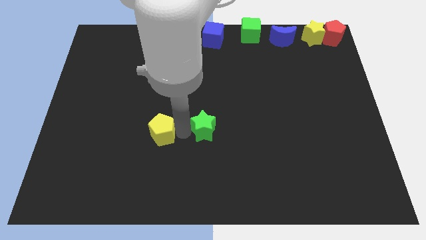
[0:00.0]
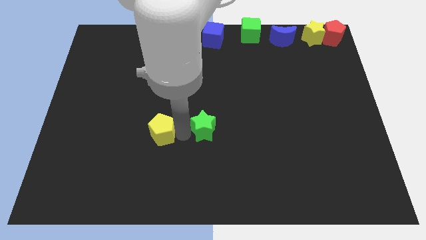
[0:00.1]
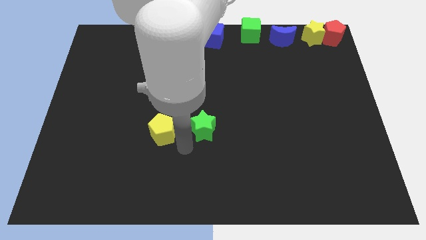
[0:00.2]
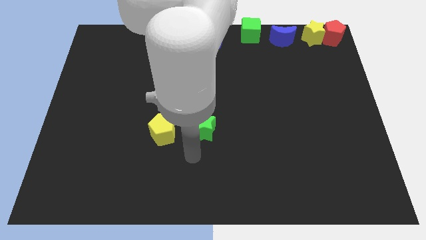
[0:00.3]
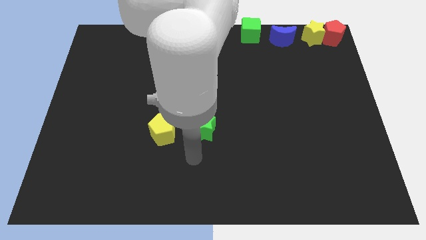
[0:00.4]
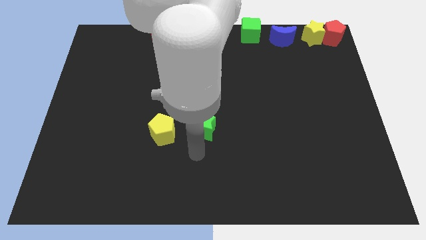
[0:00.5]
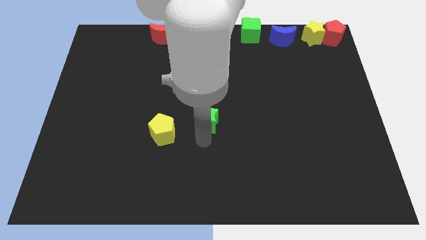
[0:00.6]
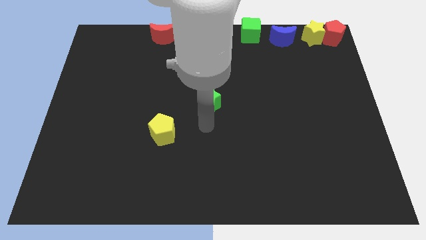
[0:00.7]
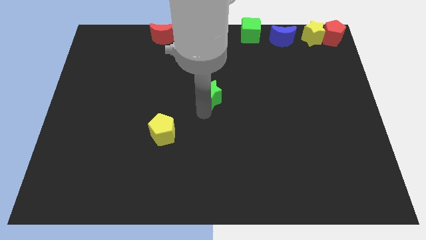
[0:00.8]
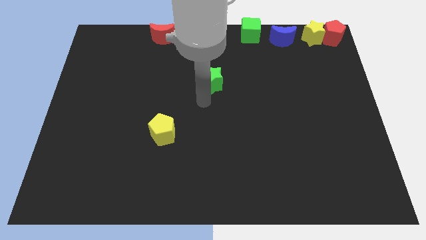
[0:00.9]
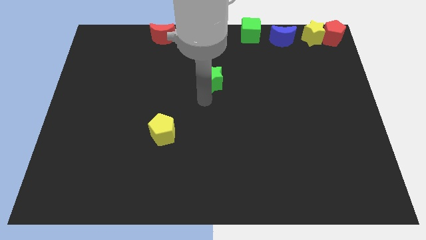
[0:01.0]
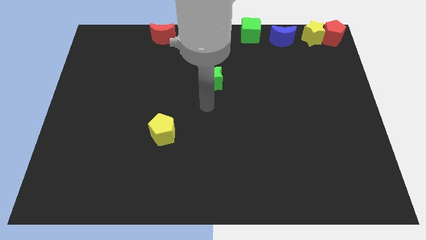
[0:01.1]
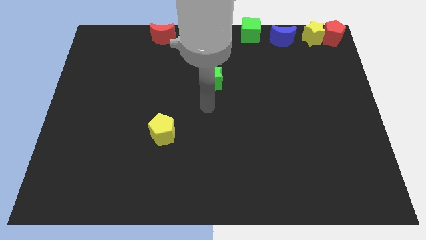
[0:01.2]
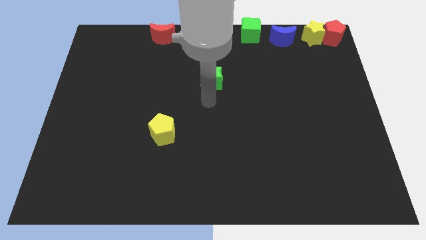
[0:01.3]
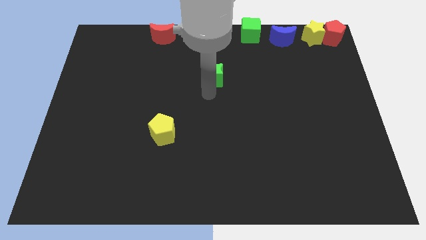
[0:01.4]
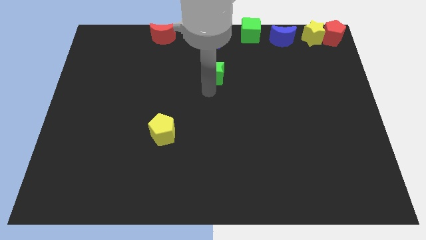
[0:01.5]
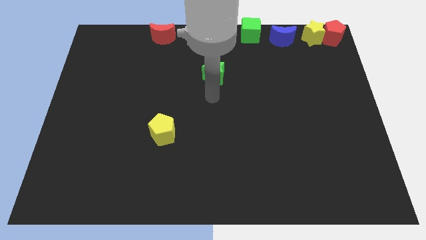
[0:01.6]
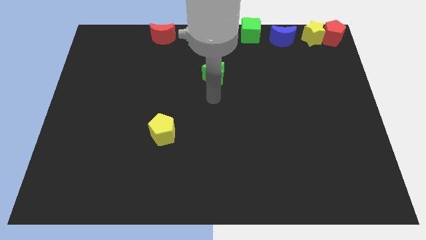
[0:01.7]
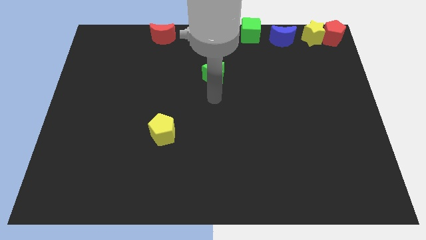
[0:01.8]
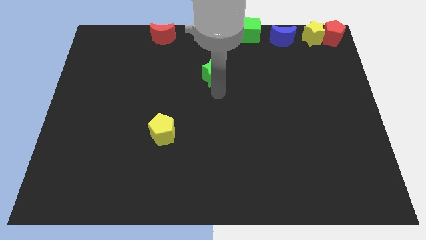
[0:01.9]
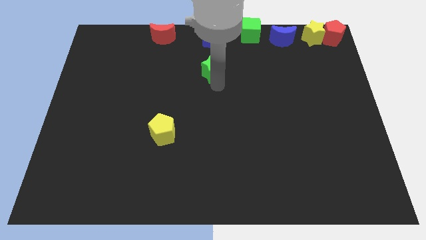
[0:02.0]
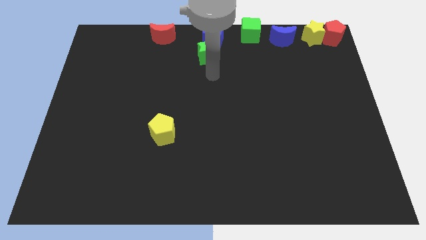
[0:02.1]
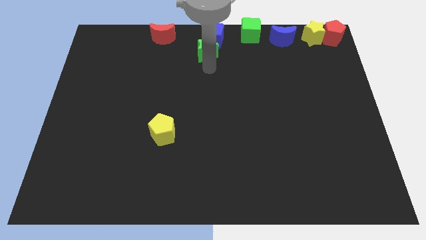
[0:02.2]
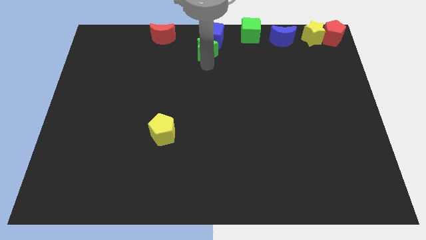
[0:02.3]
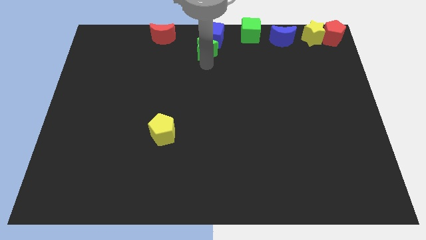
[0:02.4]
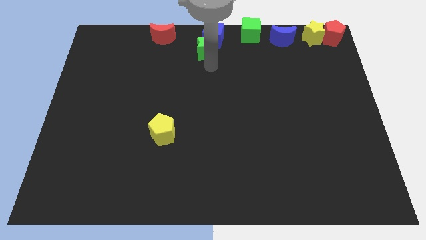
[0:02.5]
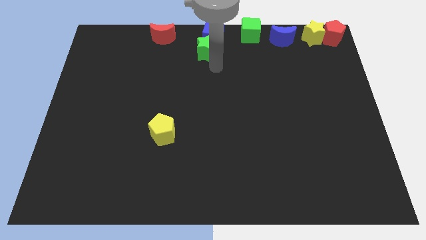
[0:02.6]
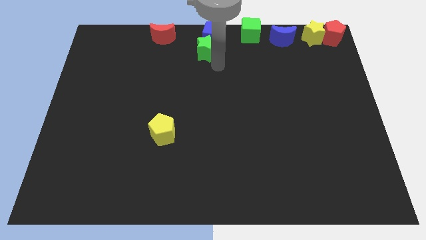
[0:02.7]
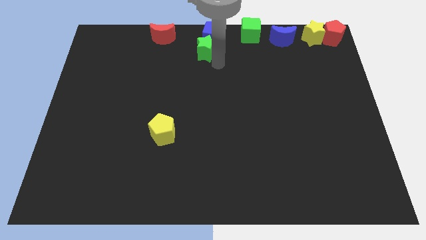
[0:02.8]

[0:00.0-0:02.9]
move the green star below the blue cube

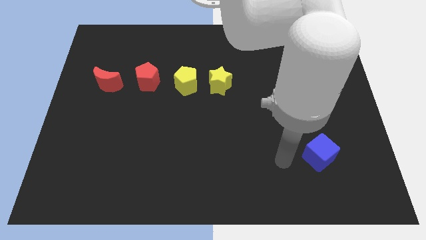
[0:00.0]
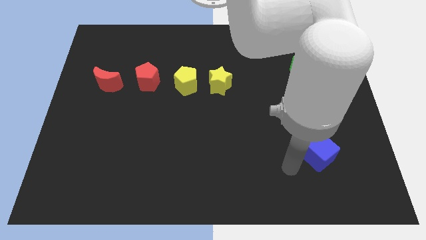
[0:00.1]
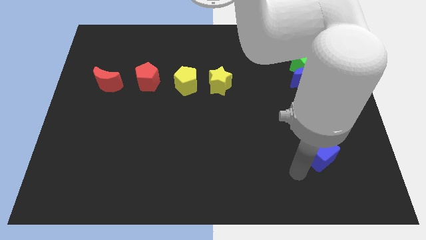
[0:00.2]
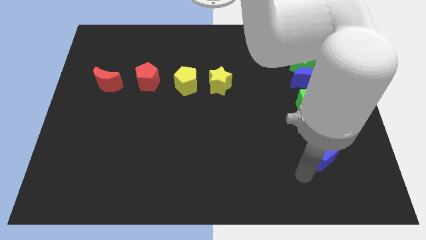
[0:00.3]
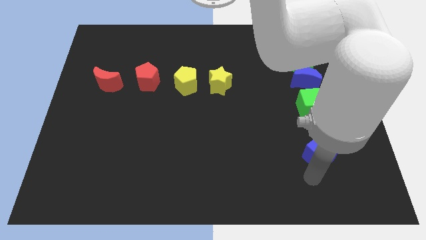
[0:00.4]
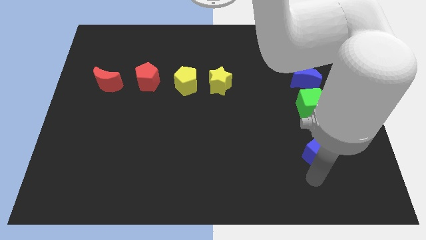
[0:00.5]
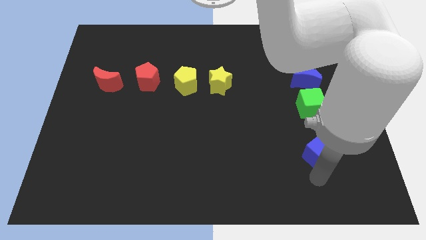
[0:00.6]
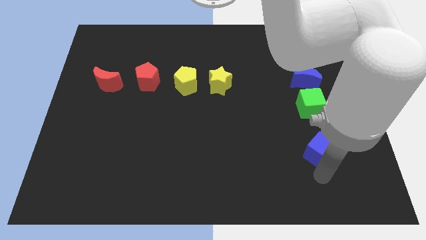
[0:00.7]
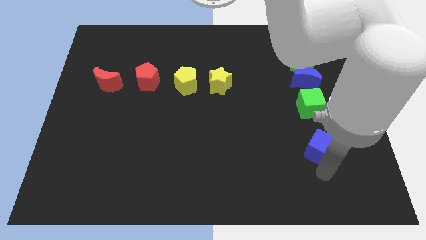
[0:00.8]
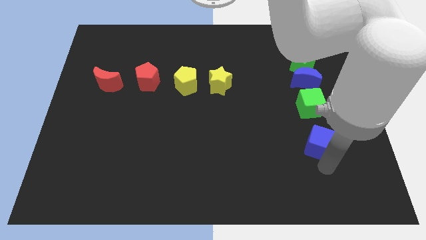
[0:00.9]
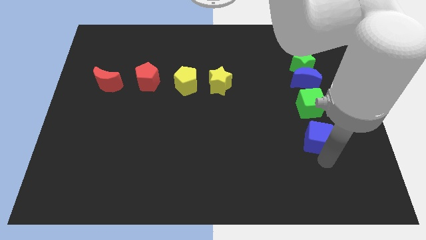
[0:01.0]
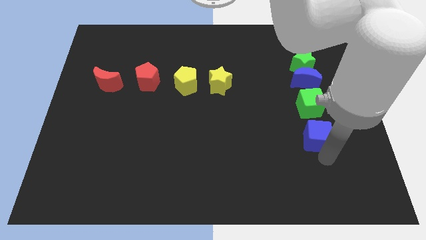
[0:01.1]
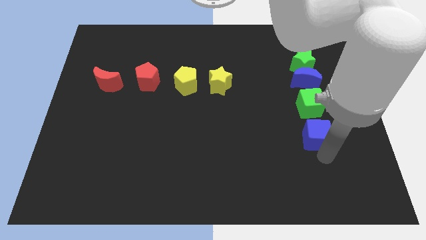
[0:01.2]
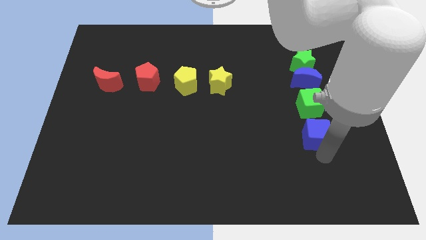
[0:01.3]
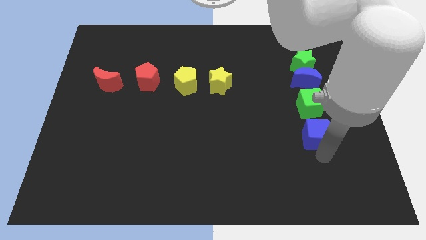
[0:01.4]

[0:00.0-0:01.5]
push the blue cube to the bottom of green cube

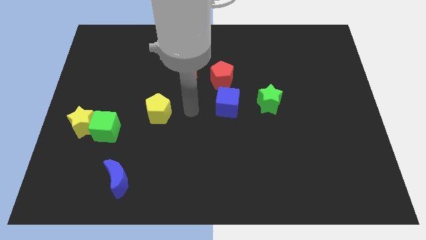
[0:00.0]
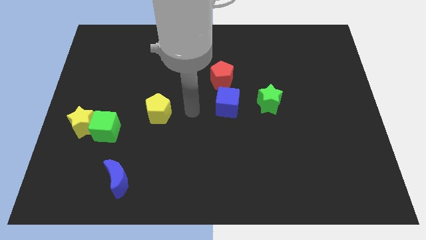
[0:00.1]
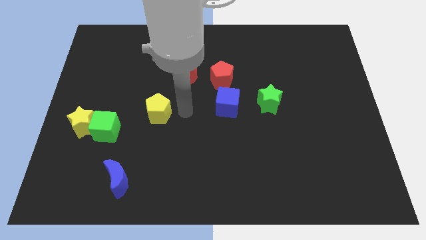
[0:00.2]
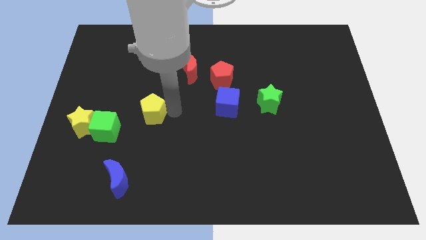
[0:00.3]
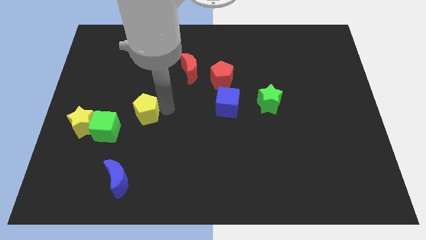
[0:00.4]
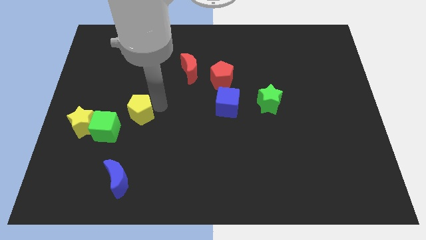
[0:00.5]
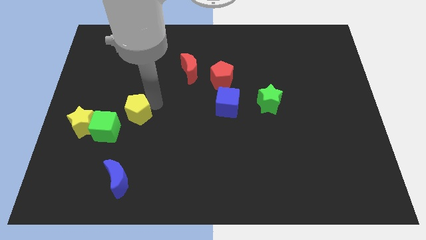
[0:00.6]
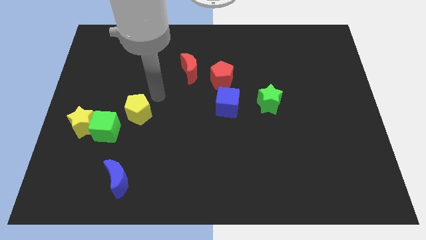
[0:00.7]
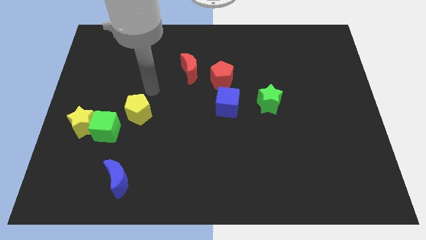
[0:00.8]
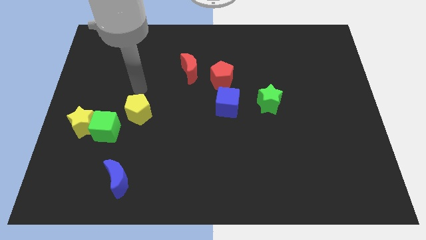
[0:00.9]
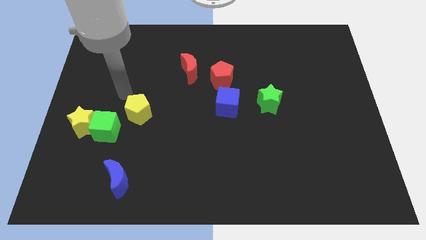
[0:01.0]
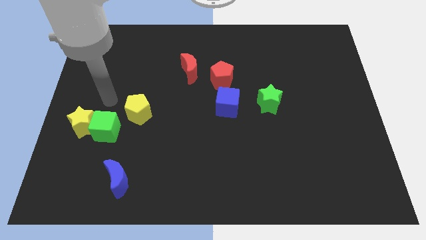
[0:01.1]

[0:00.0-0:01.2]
push yellow pentagon towards green cube

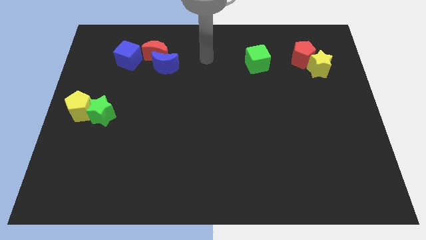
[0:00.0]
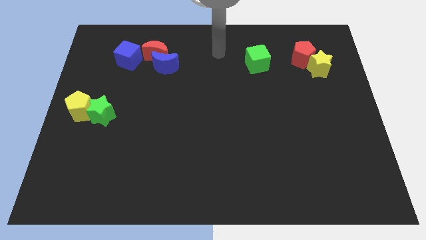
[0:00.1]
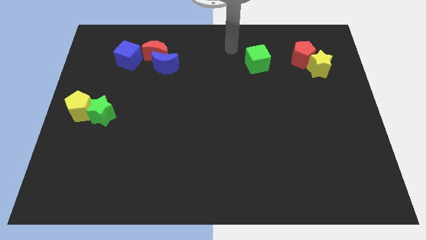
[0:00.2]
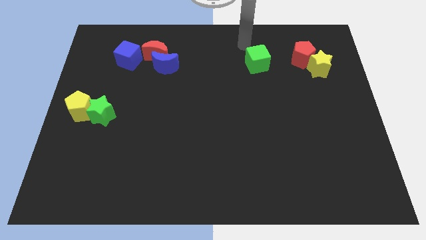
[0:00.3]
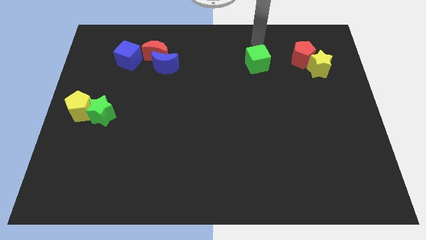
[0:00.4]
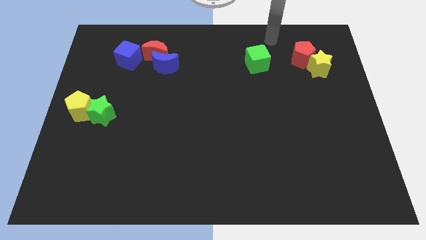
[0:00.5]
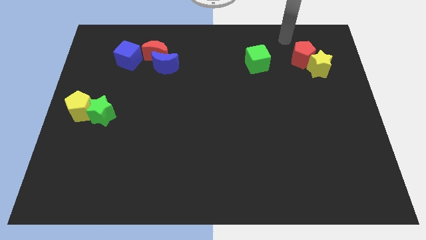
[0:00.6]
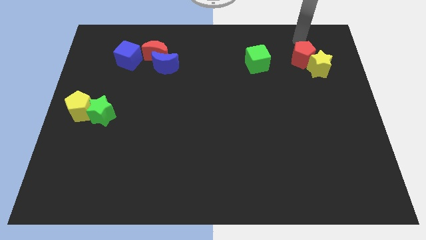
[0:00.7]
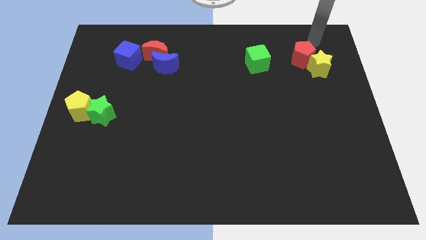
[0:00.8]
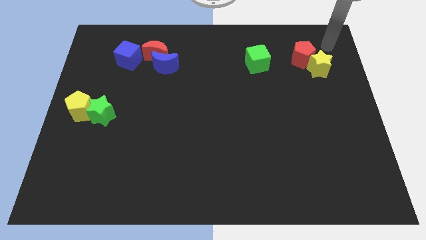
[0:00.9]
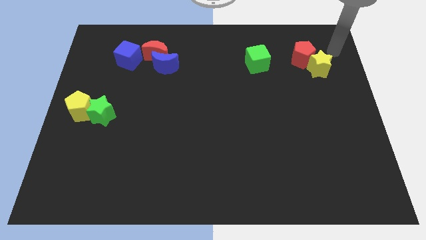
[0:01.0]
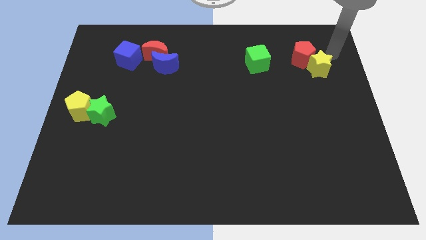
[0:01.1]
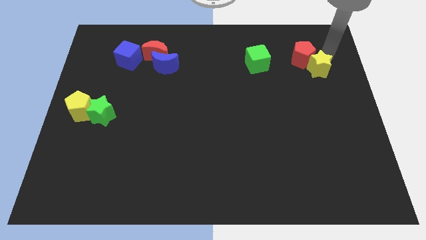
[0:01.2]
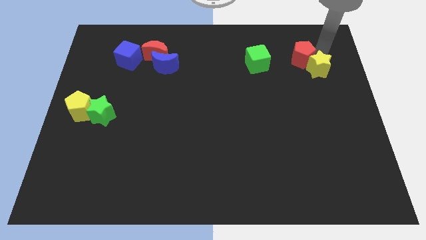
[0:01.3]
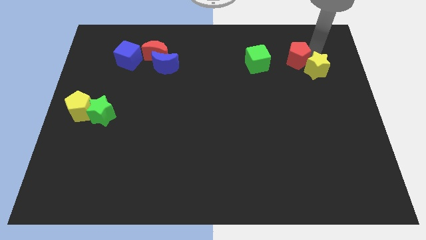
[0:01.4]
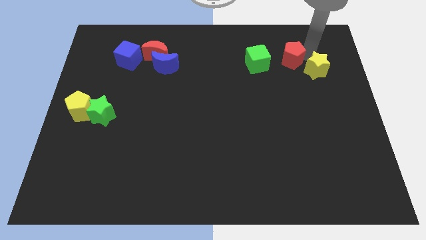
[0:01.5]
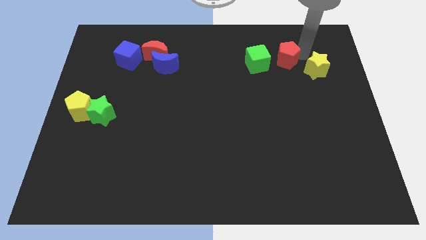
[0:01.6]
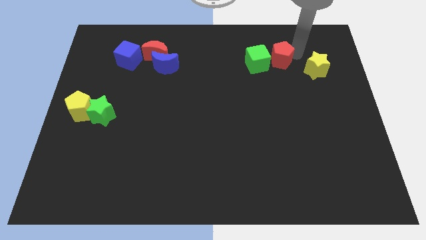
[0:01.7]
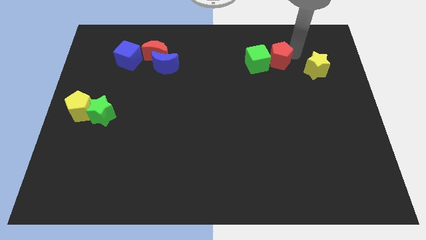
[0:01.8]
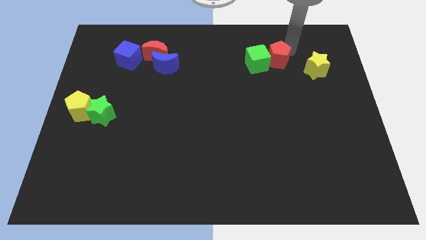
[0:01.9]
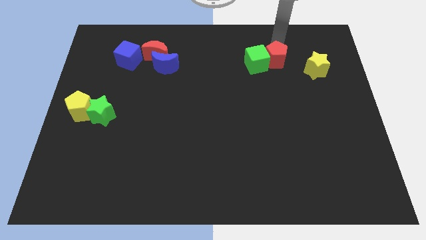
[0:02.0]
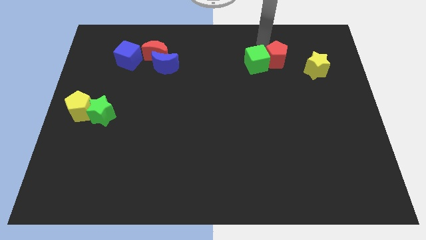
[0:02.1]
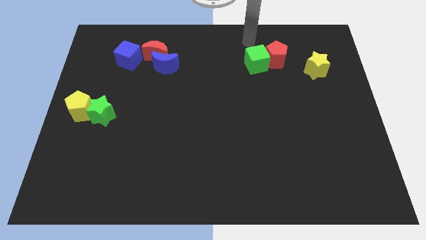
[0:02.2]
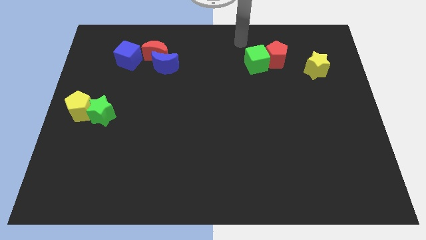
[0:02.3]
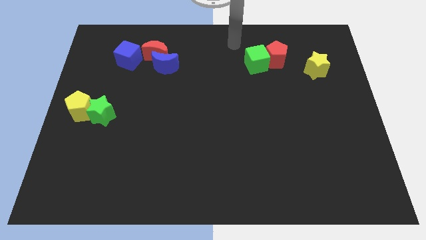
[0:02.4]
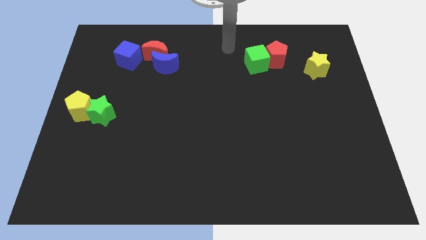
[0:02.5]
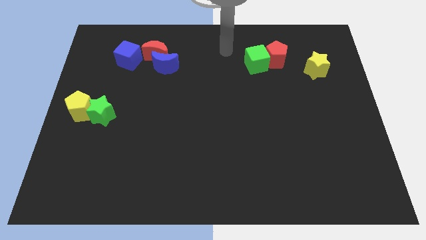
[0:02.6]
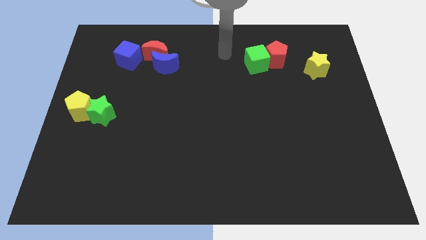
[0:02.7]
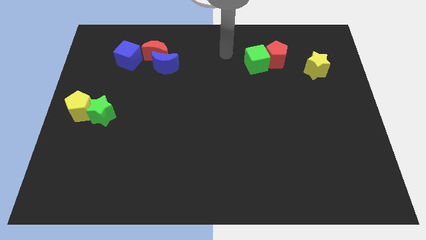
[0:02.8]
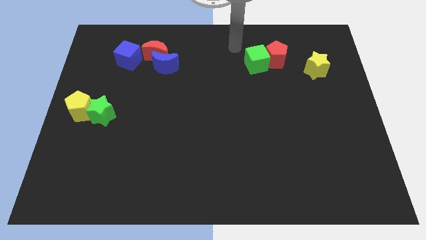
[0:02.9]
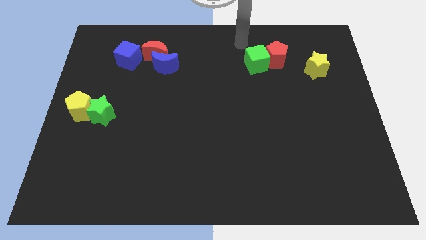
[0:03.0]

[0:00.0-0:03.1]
separate red pentagon from yellow star

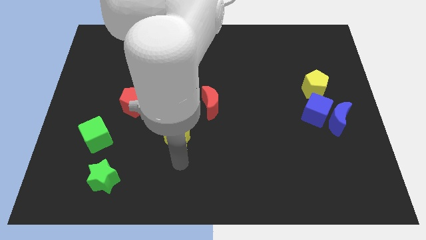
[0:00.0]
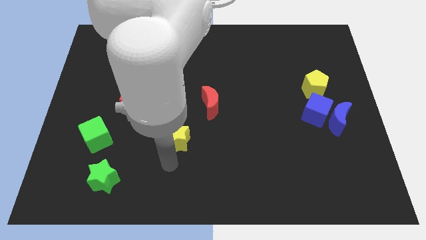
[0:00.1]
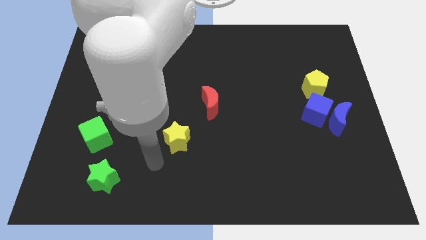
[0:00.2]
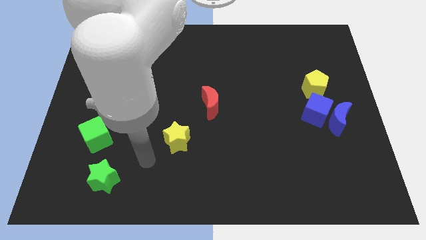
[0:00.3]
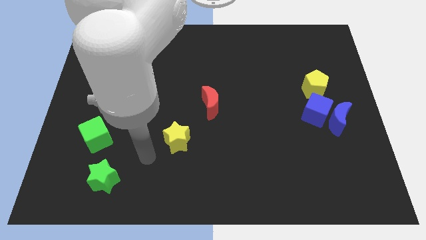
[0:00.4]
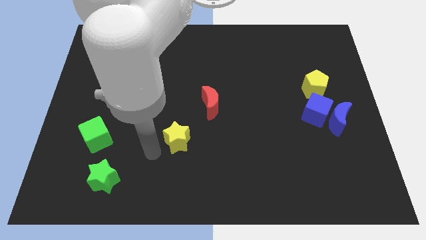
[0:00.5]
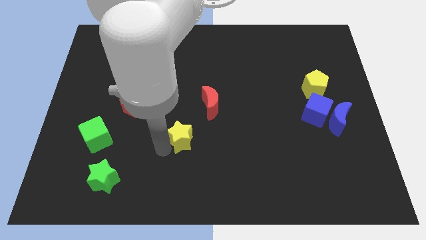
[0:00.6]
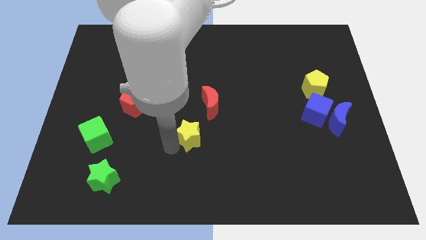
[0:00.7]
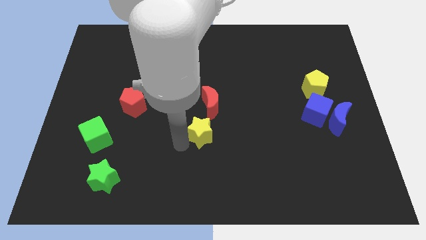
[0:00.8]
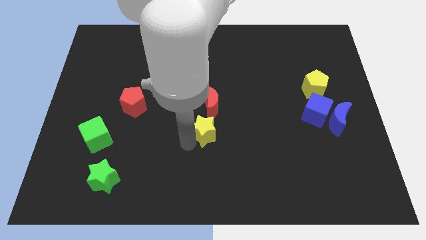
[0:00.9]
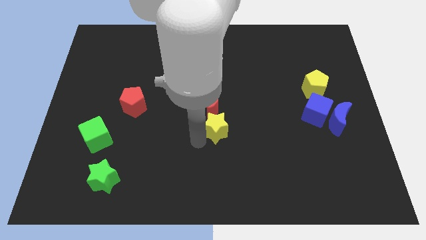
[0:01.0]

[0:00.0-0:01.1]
move the yellow star to the bottom of the red crescent
